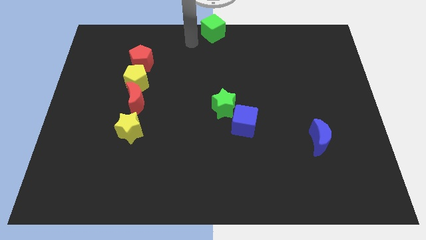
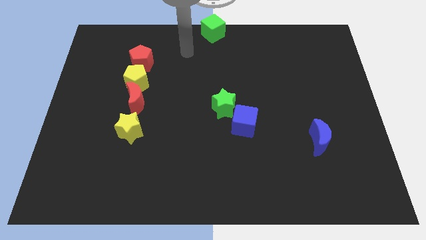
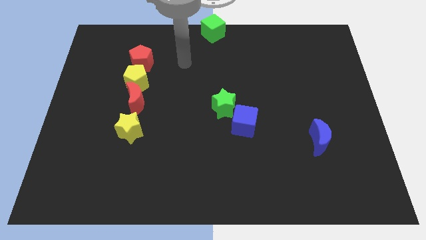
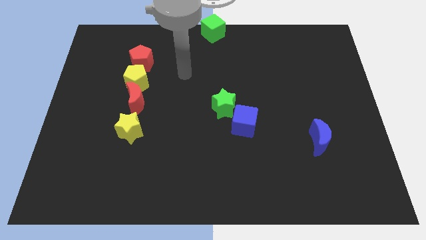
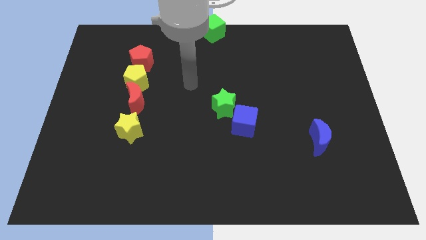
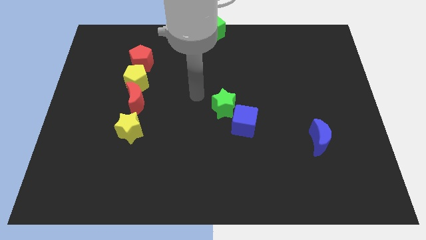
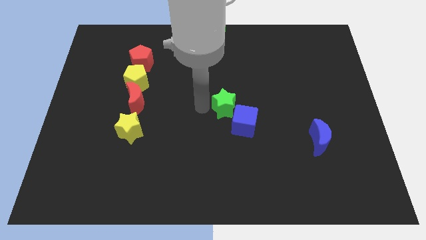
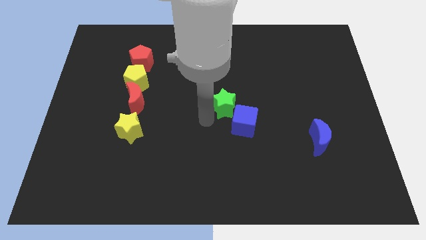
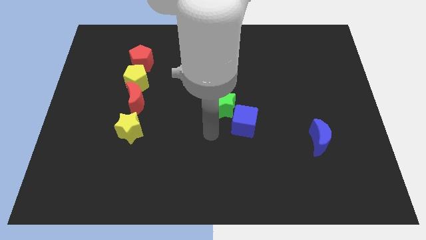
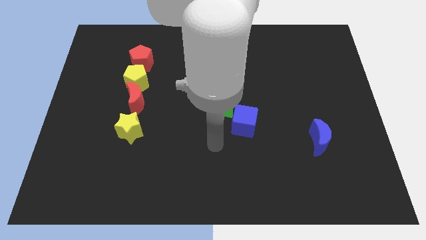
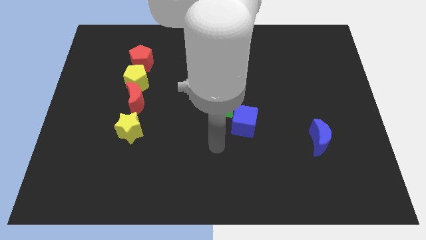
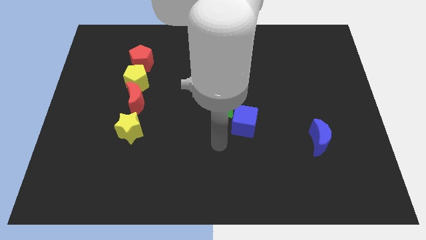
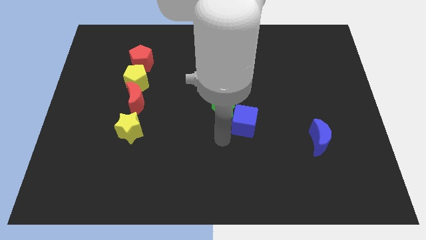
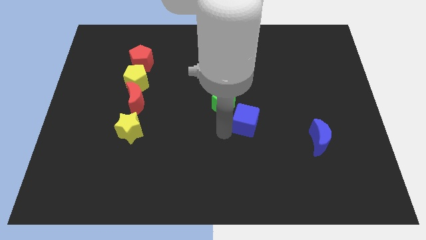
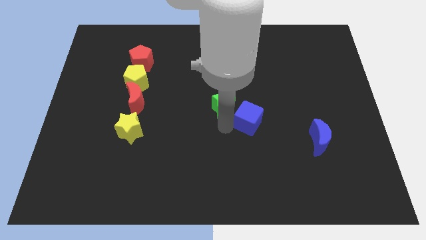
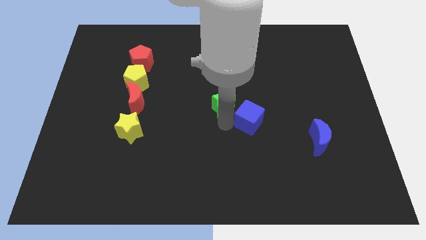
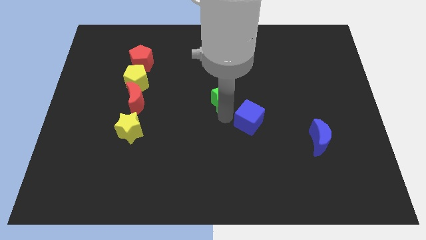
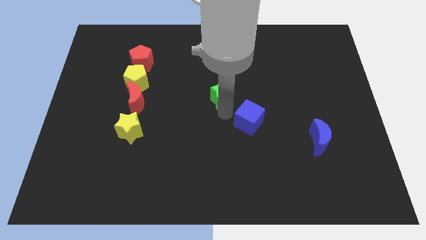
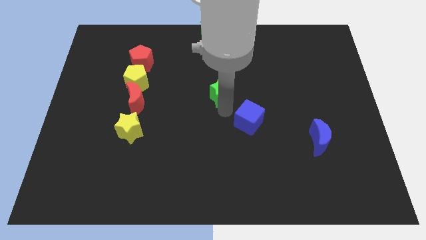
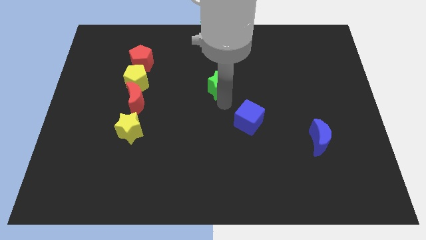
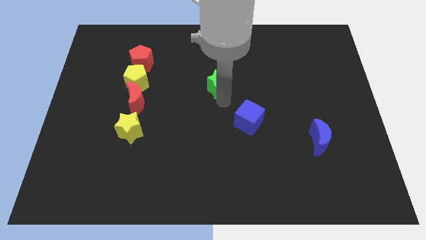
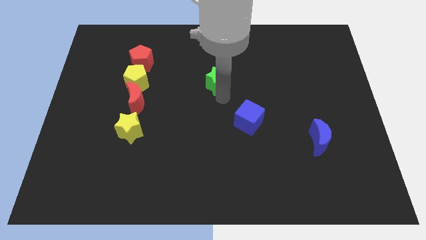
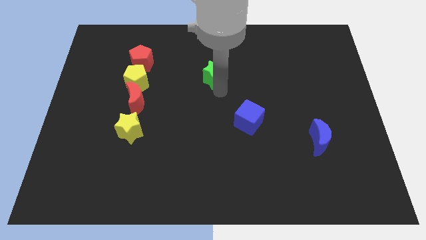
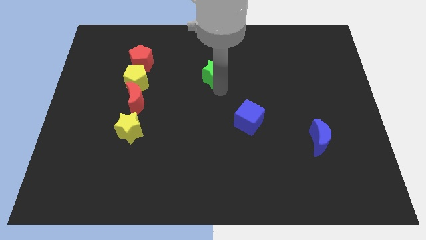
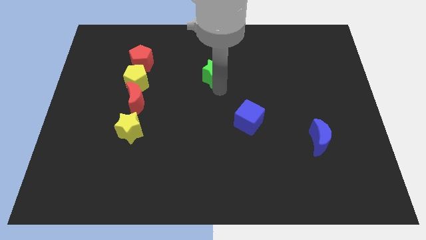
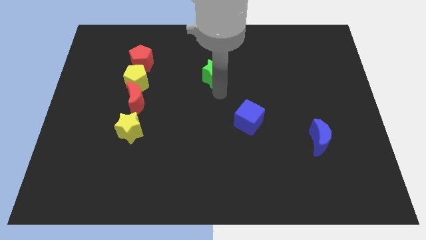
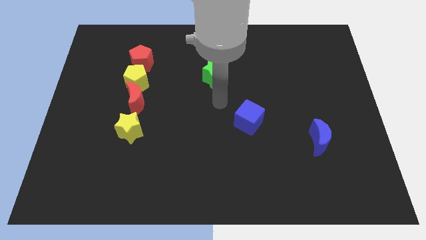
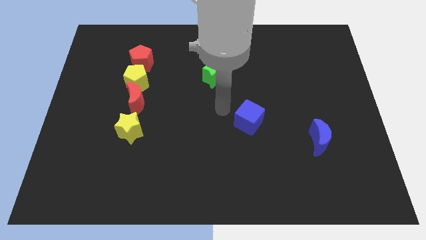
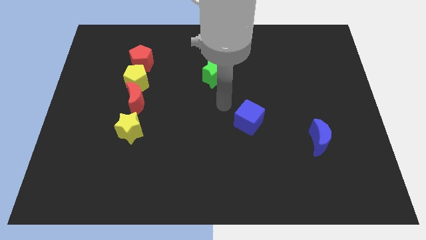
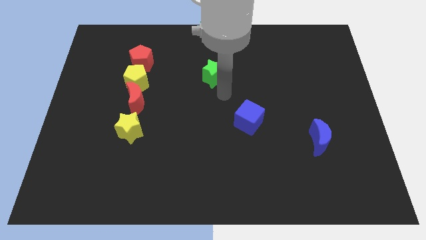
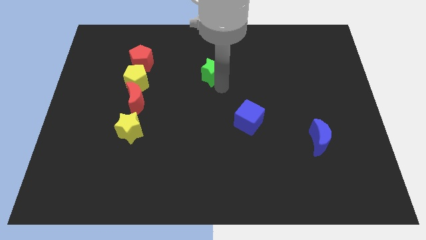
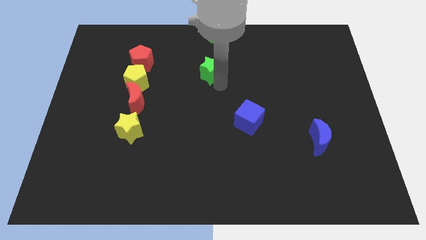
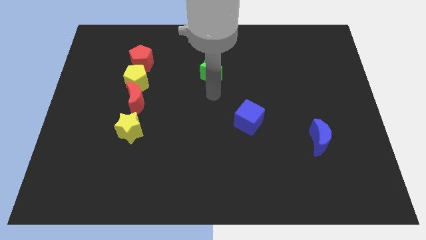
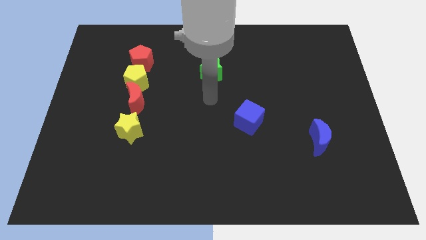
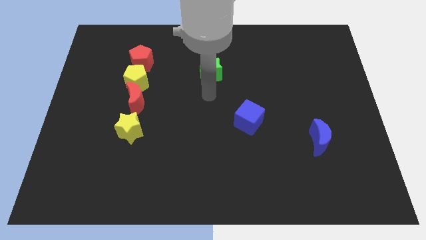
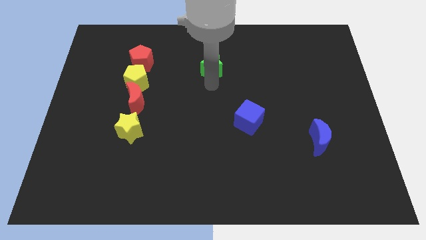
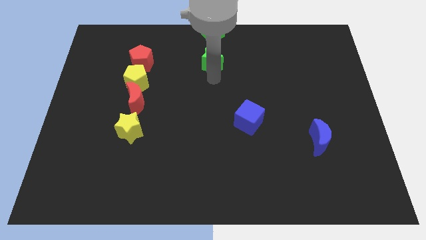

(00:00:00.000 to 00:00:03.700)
separate the green star from the blue cube

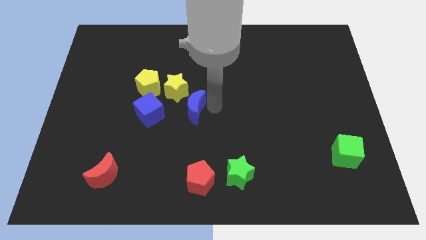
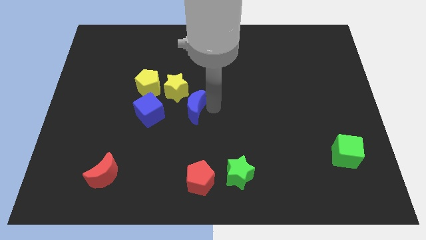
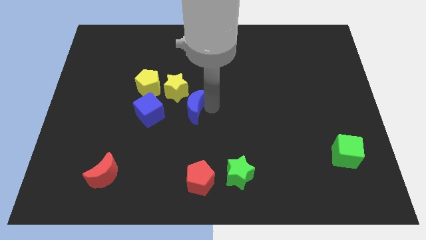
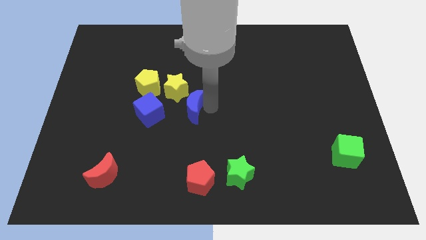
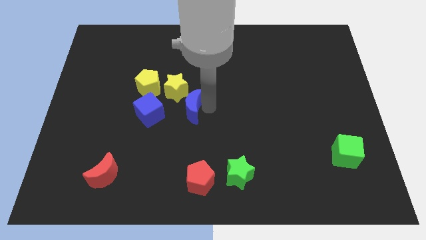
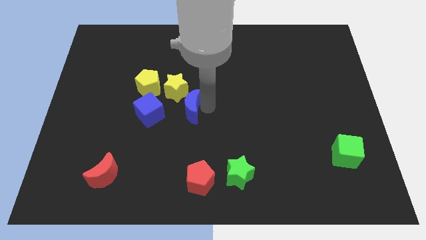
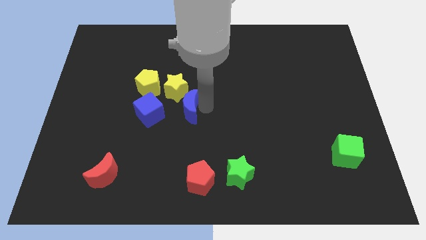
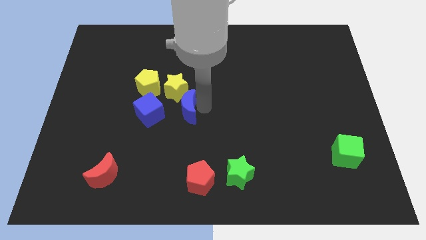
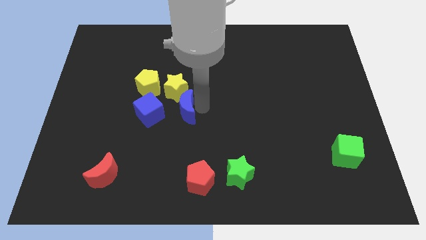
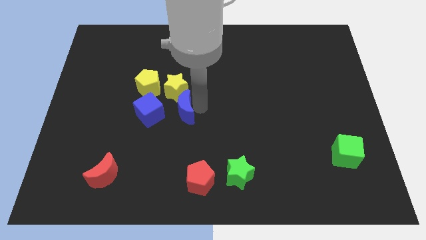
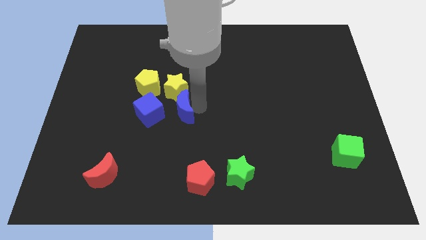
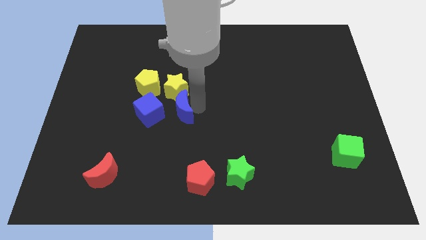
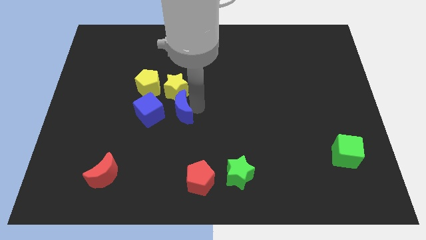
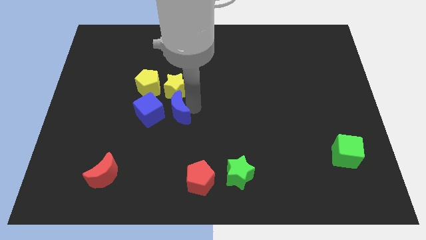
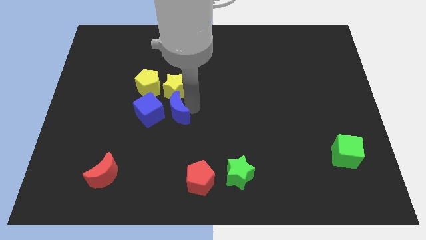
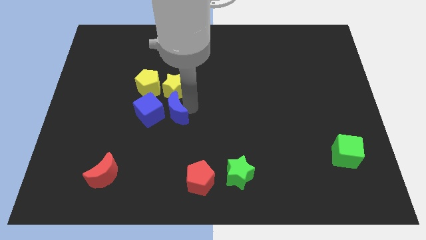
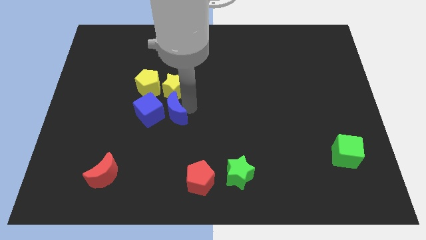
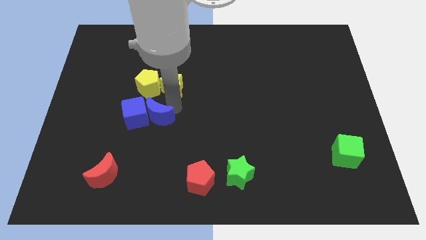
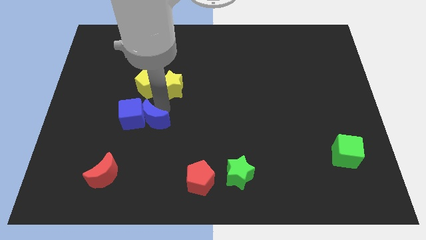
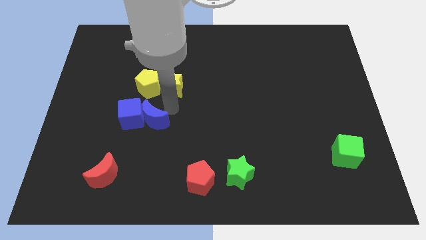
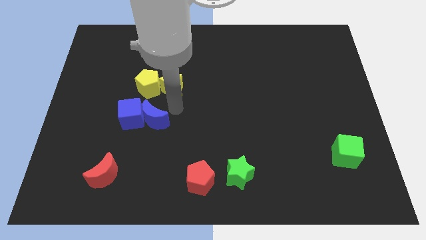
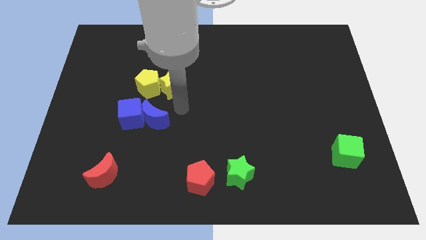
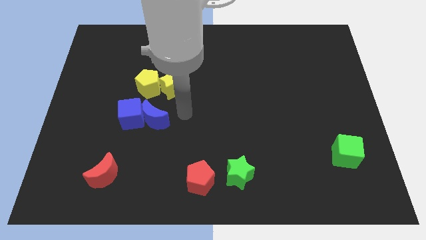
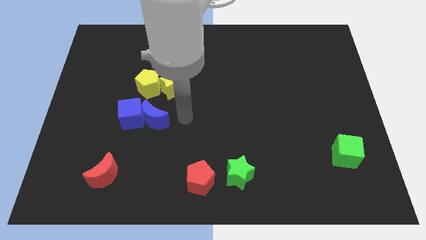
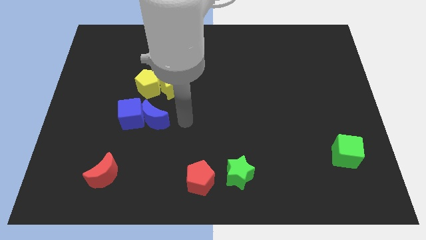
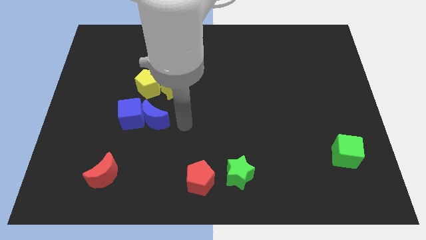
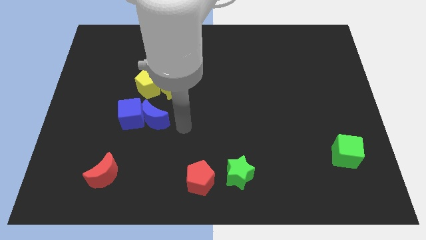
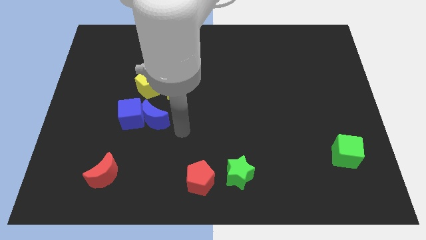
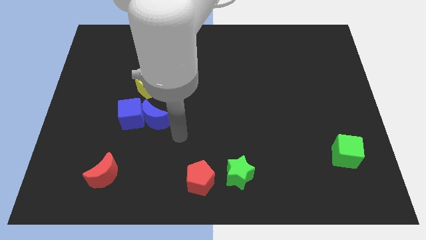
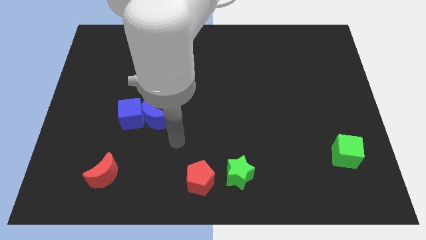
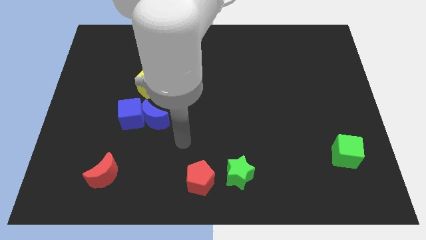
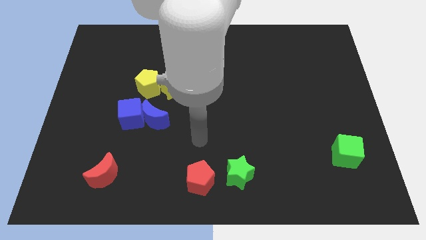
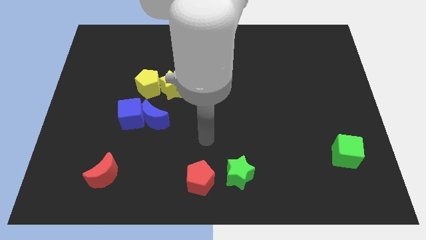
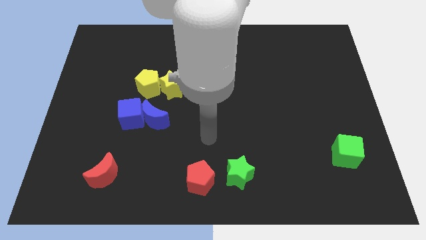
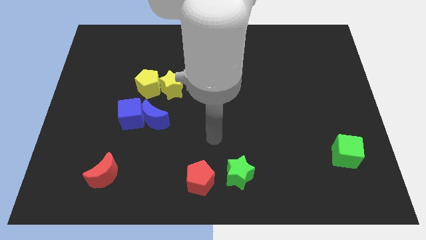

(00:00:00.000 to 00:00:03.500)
push blue crescent slightly to the left

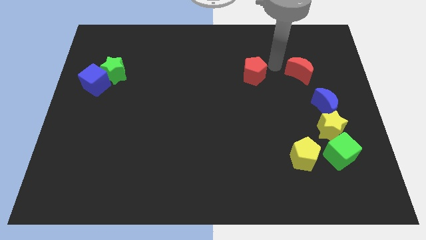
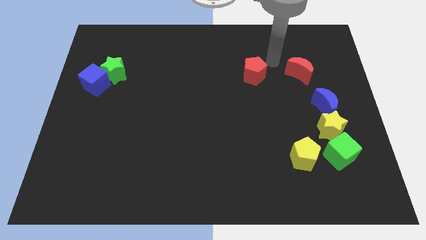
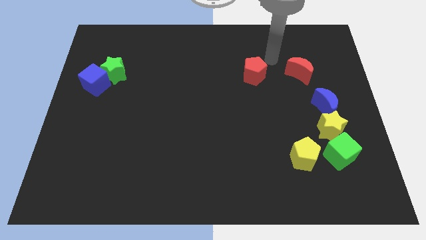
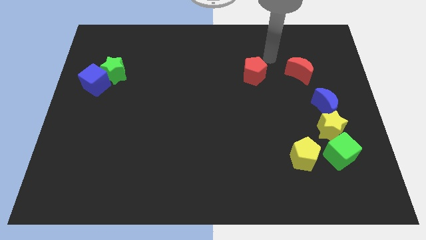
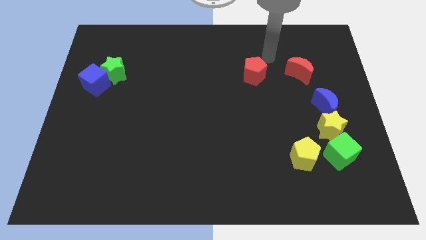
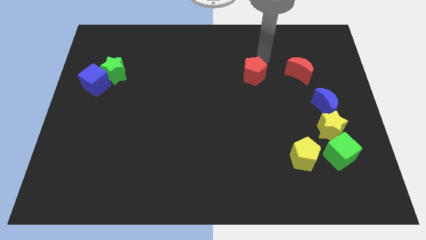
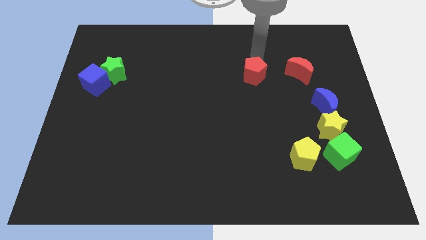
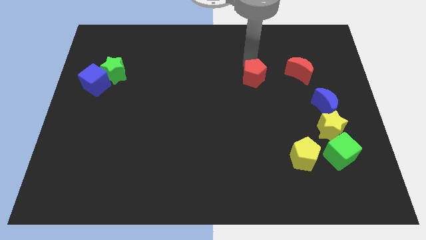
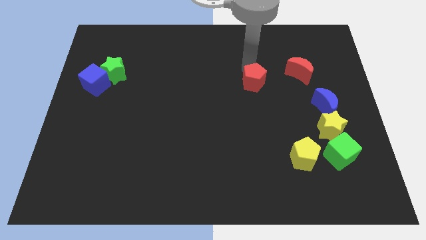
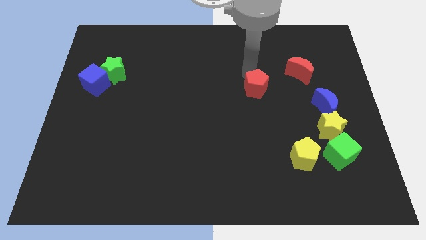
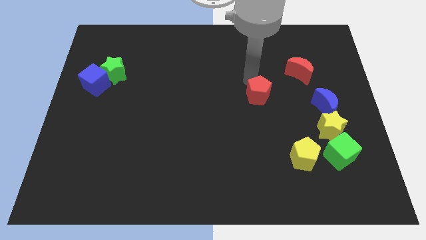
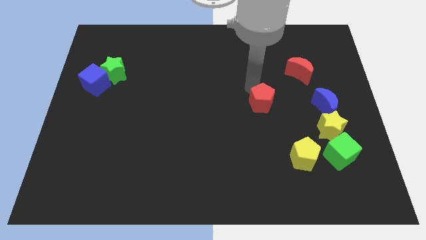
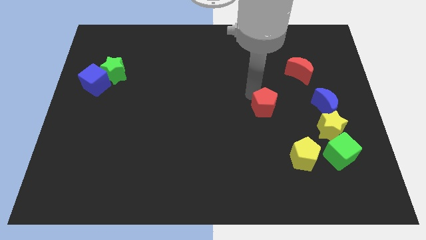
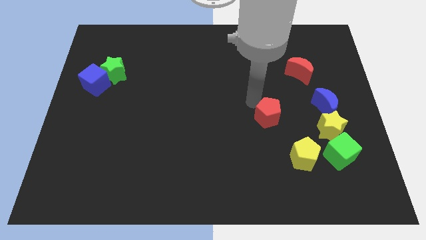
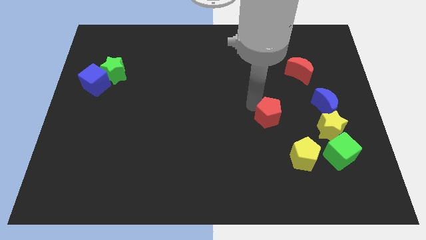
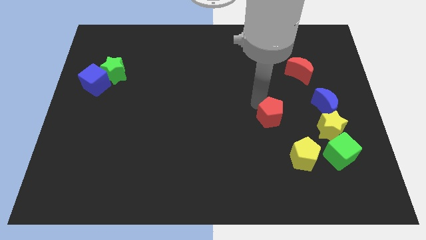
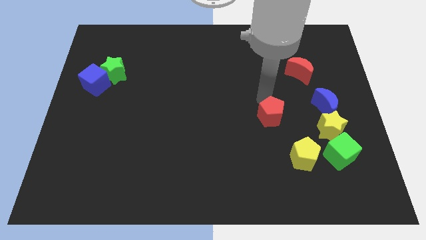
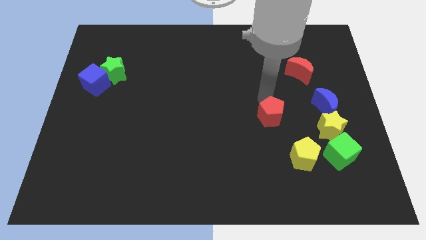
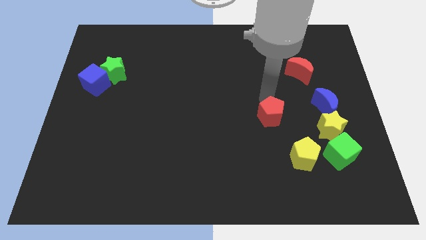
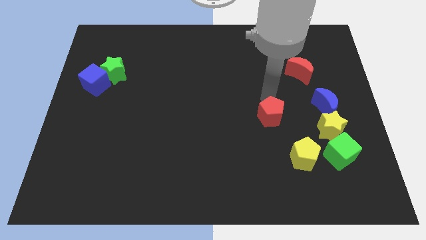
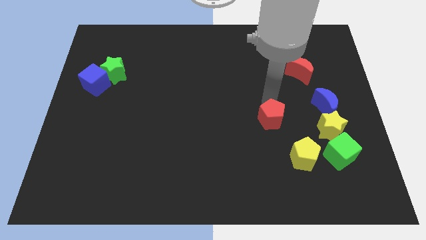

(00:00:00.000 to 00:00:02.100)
move red pentagon down to the left of yellow star
